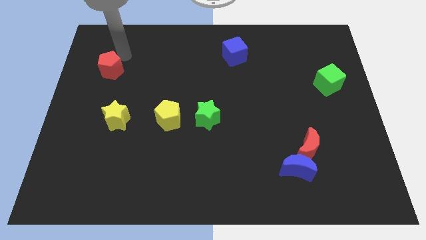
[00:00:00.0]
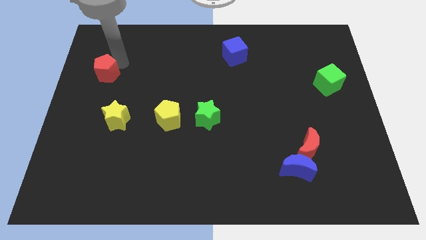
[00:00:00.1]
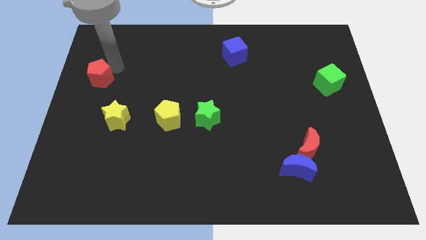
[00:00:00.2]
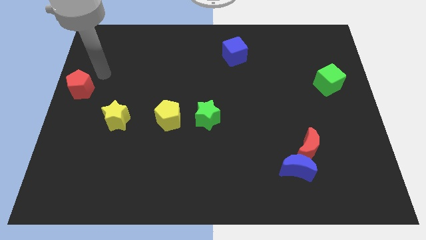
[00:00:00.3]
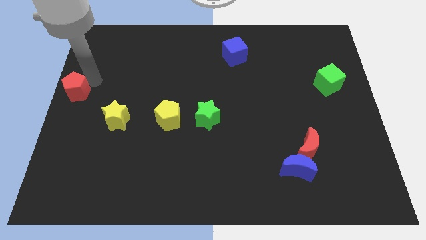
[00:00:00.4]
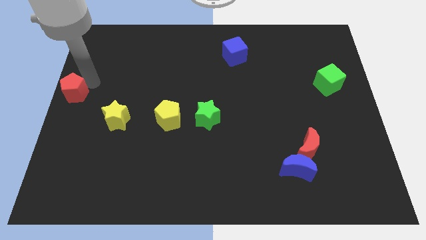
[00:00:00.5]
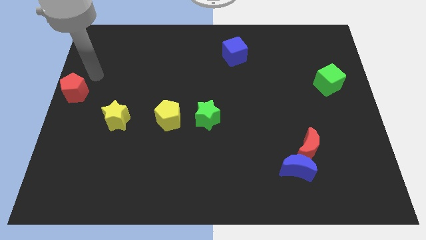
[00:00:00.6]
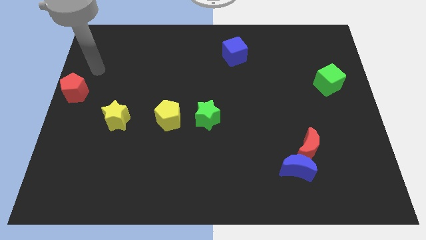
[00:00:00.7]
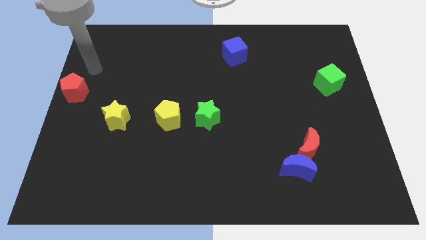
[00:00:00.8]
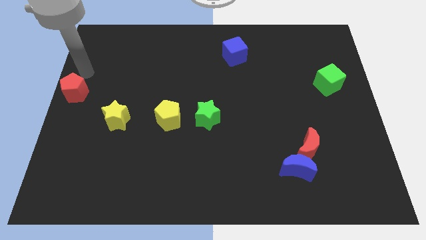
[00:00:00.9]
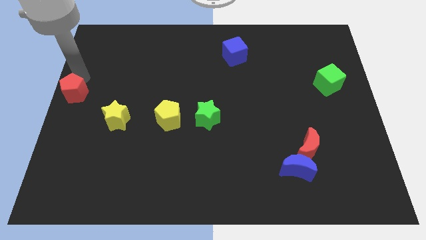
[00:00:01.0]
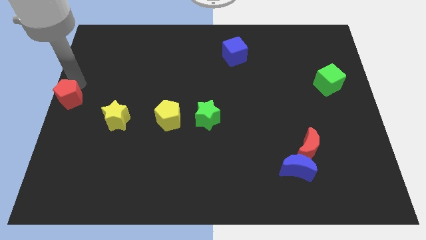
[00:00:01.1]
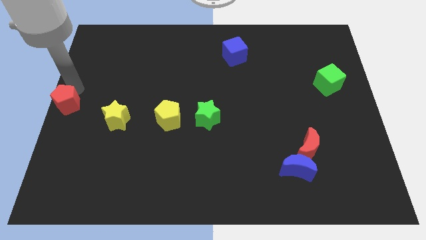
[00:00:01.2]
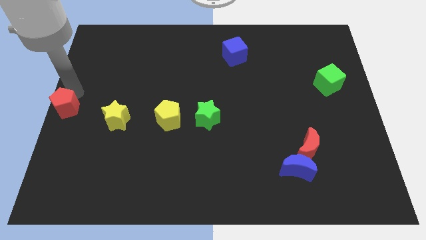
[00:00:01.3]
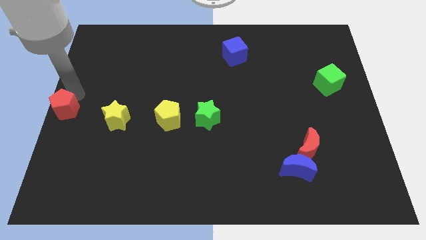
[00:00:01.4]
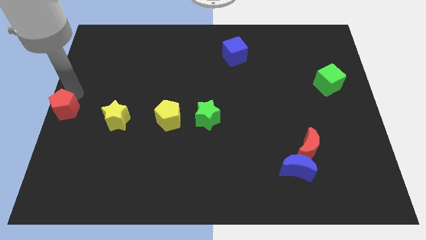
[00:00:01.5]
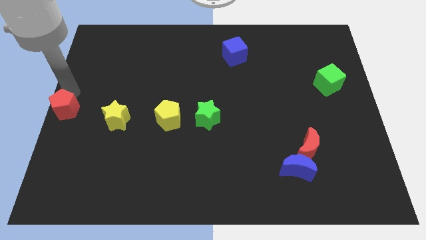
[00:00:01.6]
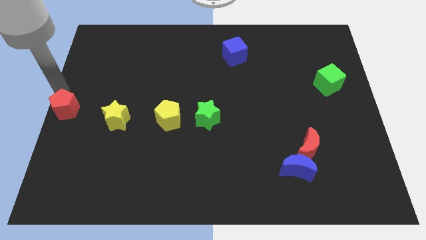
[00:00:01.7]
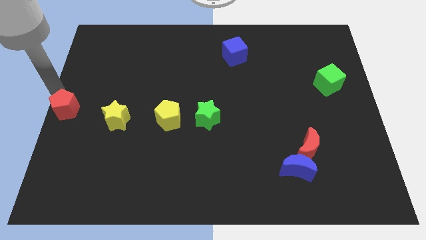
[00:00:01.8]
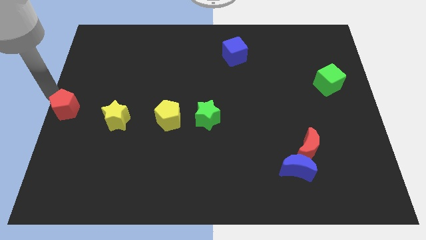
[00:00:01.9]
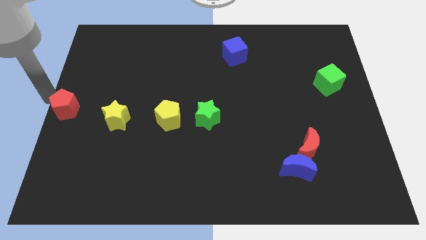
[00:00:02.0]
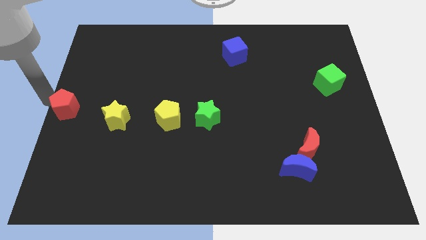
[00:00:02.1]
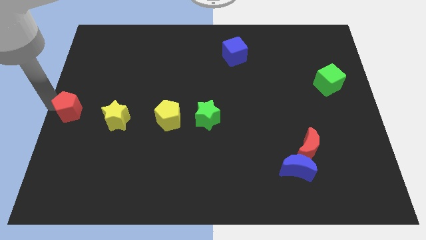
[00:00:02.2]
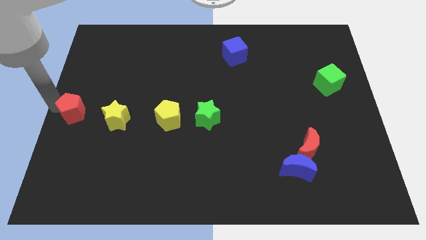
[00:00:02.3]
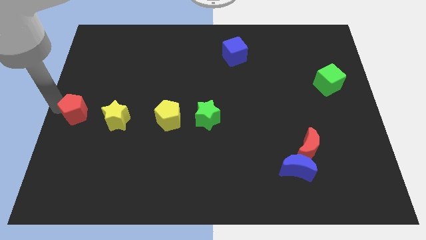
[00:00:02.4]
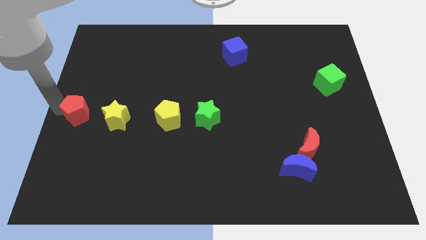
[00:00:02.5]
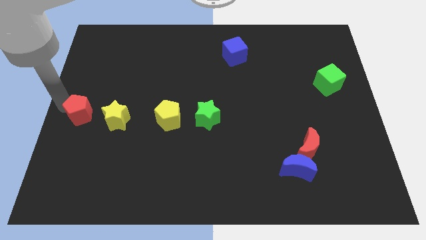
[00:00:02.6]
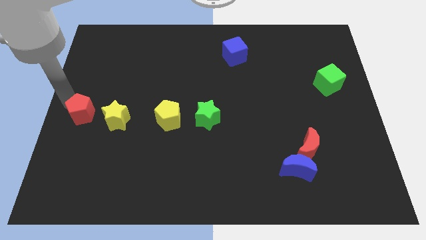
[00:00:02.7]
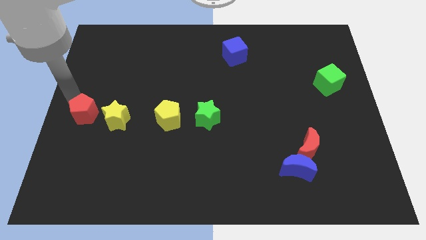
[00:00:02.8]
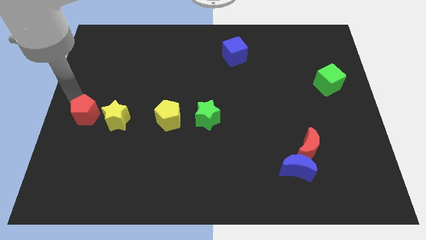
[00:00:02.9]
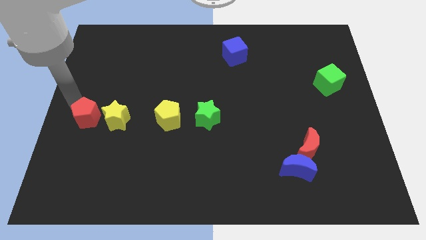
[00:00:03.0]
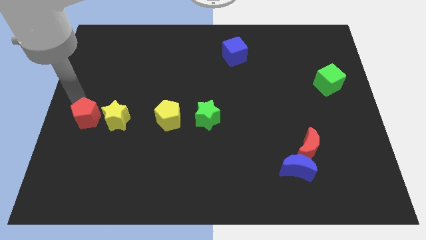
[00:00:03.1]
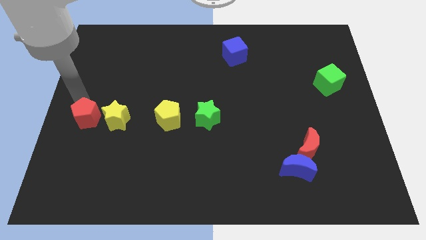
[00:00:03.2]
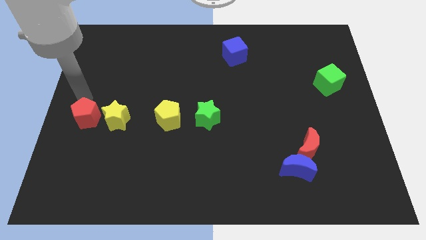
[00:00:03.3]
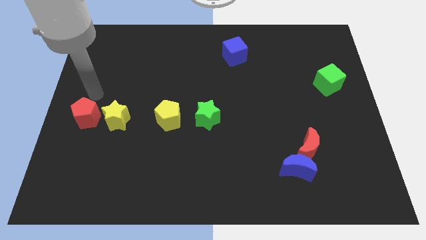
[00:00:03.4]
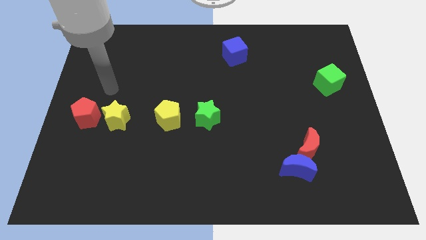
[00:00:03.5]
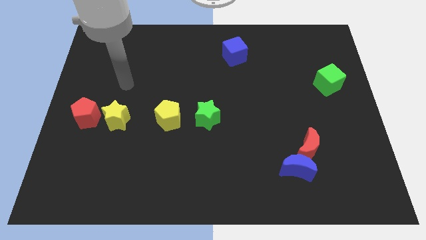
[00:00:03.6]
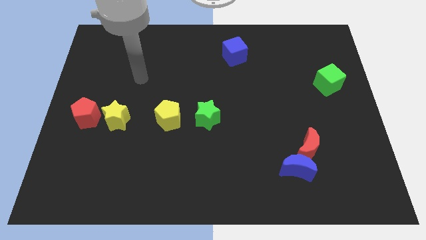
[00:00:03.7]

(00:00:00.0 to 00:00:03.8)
move red pentagon left to yellow star

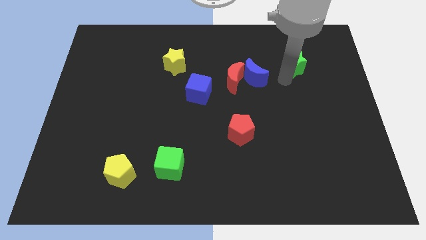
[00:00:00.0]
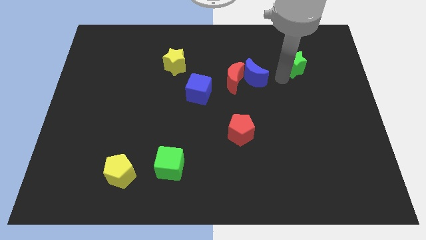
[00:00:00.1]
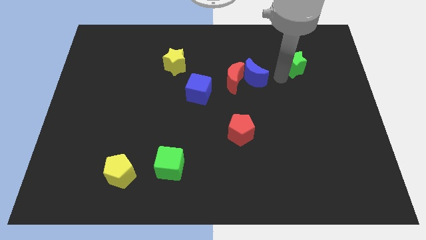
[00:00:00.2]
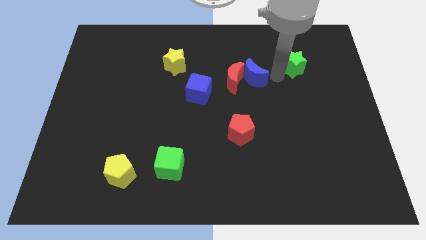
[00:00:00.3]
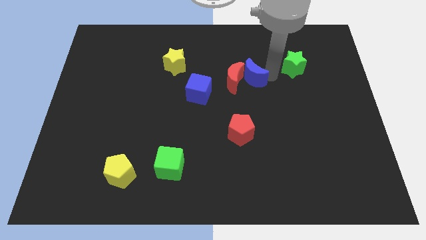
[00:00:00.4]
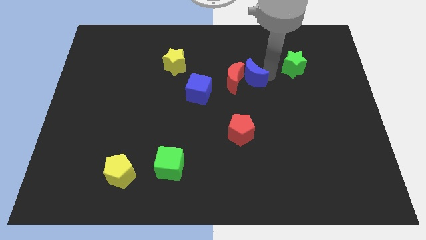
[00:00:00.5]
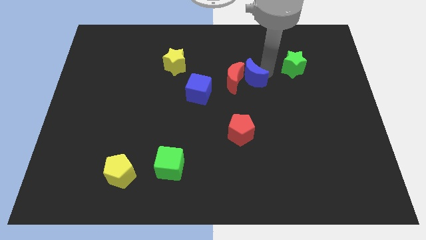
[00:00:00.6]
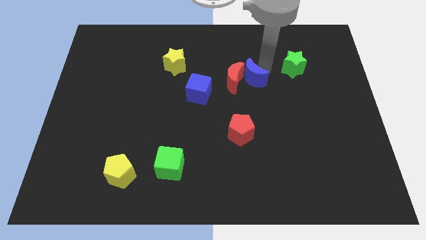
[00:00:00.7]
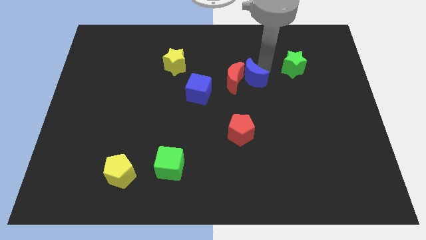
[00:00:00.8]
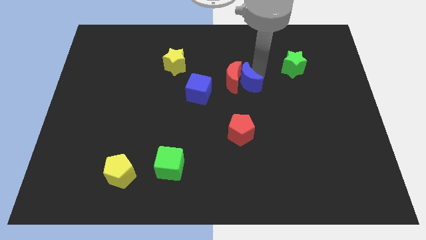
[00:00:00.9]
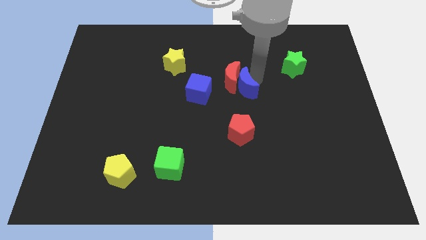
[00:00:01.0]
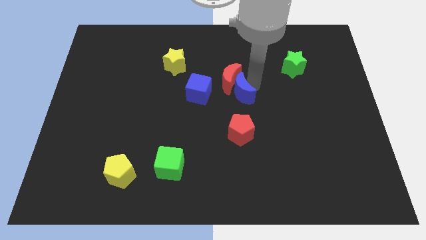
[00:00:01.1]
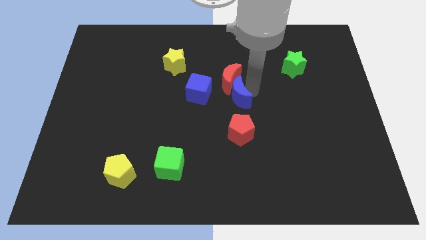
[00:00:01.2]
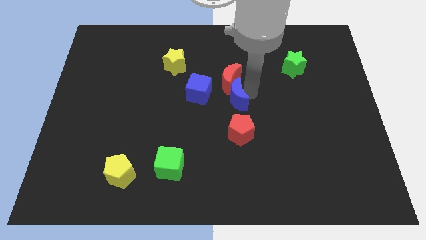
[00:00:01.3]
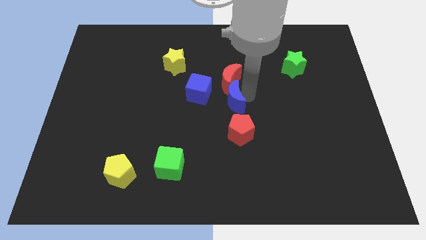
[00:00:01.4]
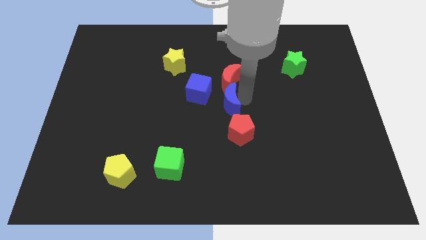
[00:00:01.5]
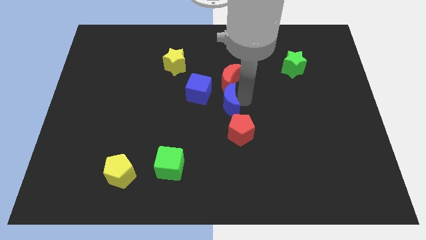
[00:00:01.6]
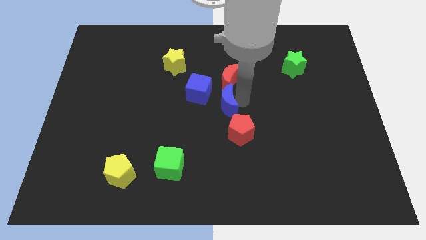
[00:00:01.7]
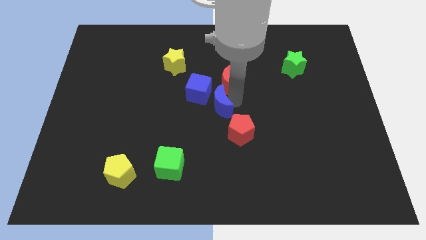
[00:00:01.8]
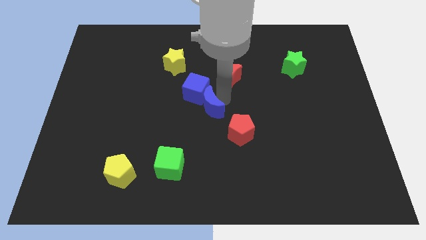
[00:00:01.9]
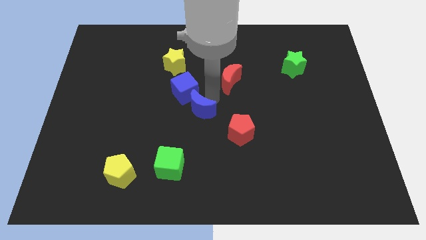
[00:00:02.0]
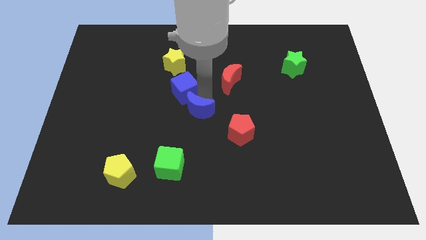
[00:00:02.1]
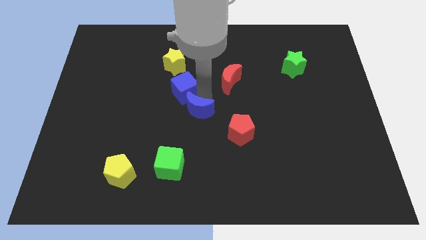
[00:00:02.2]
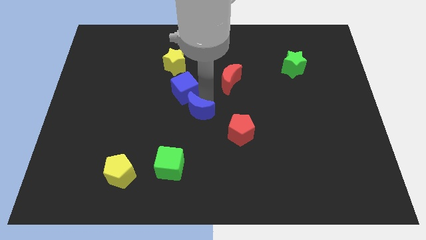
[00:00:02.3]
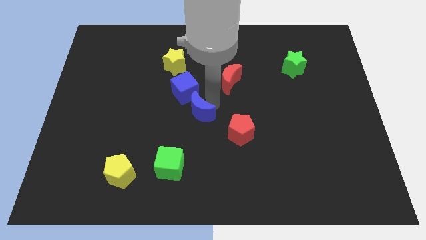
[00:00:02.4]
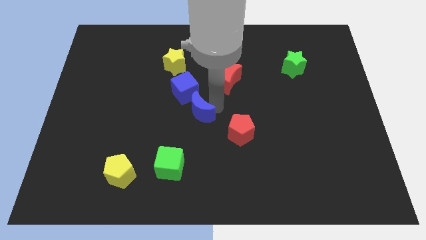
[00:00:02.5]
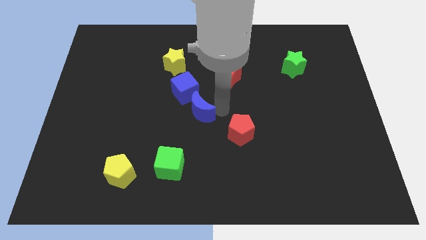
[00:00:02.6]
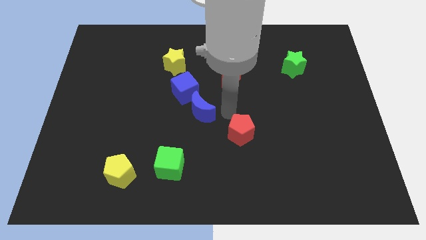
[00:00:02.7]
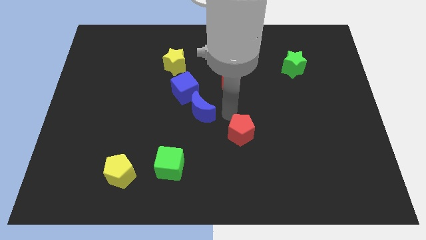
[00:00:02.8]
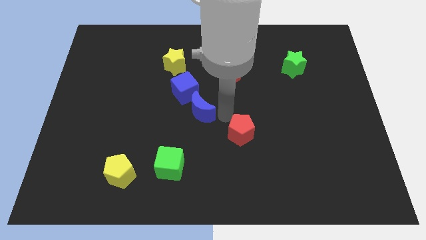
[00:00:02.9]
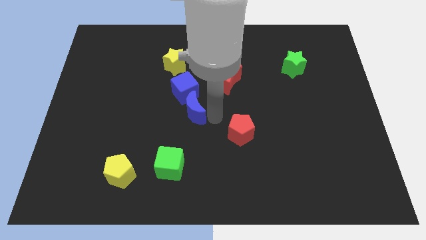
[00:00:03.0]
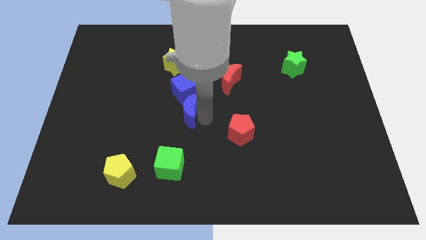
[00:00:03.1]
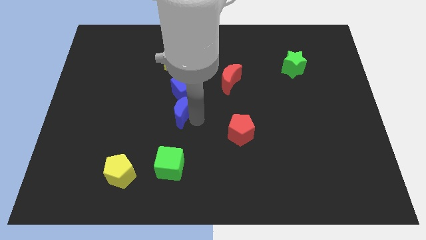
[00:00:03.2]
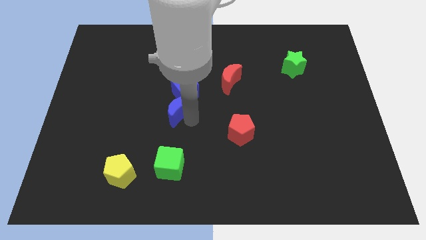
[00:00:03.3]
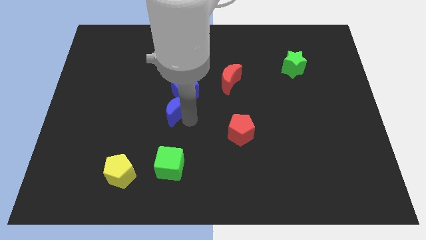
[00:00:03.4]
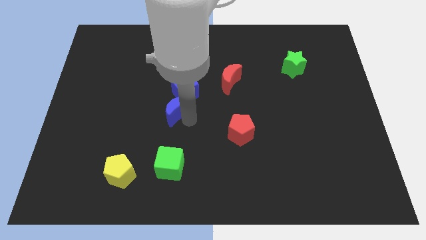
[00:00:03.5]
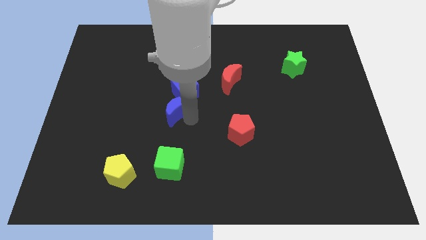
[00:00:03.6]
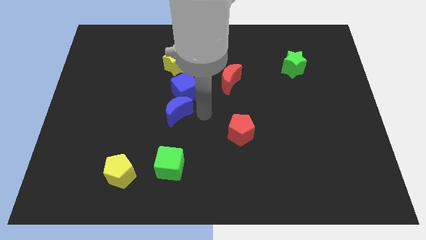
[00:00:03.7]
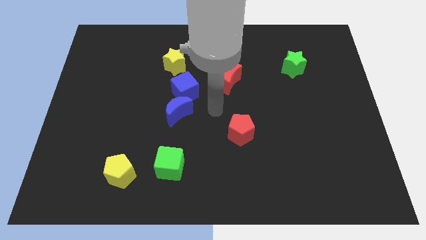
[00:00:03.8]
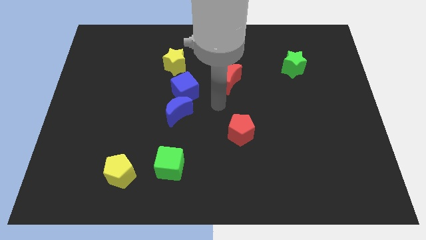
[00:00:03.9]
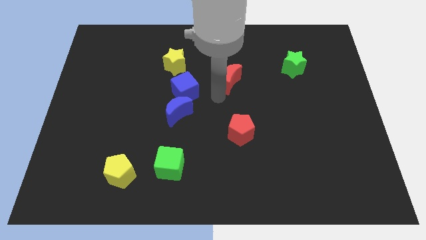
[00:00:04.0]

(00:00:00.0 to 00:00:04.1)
separate the blue crescent from the red moon

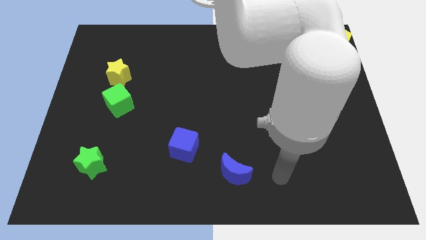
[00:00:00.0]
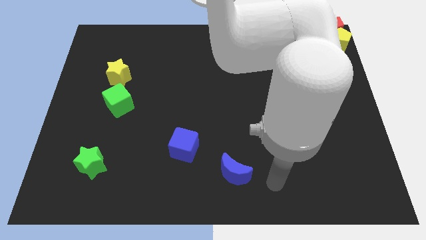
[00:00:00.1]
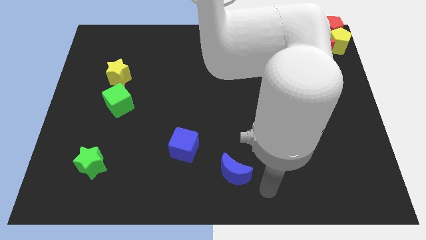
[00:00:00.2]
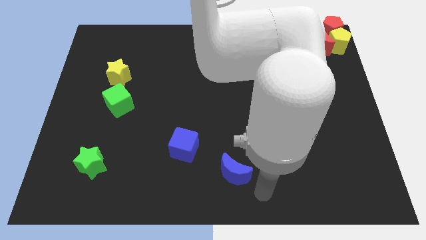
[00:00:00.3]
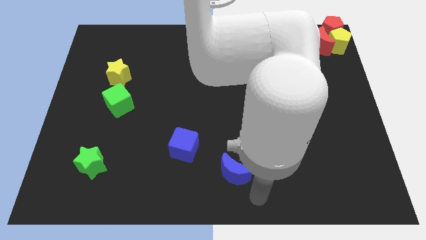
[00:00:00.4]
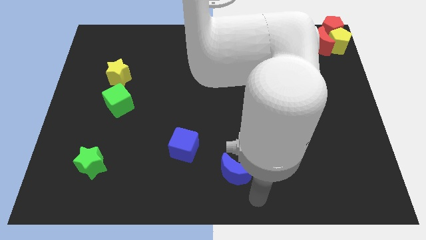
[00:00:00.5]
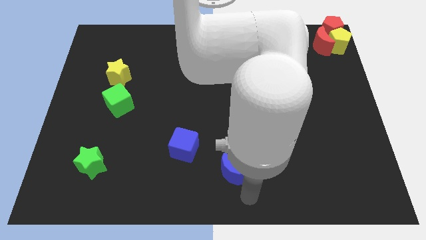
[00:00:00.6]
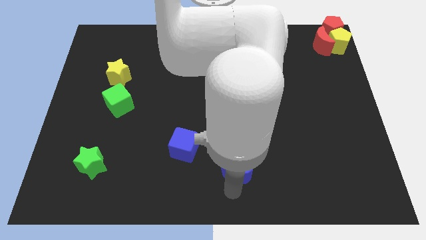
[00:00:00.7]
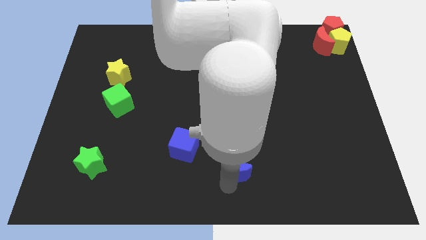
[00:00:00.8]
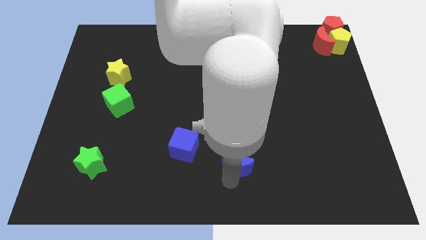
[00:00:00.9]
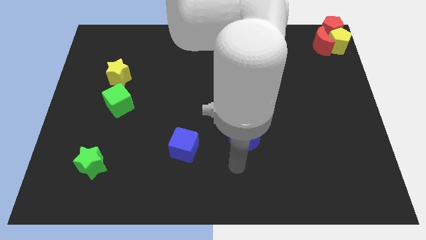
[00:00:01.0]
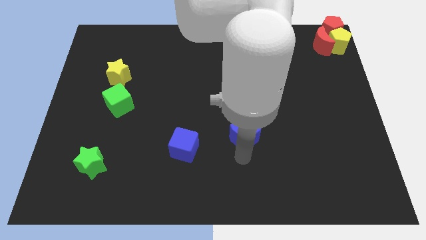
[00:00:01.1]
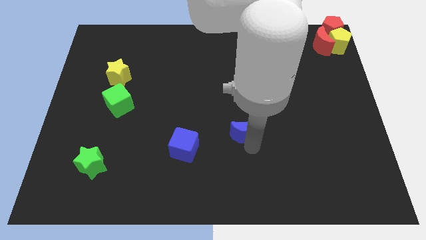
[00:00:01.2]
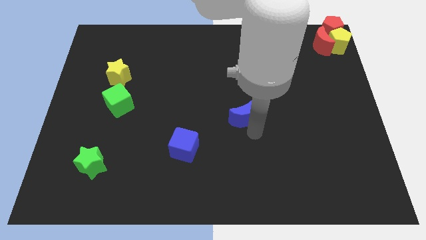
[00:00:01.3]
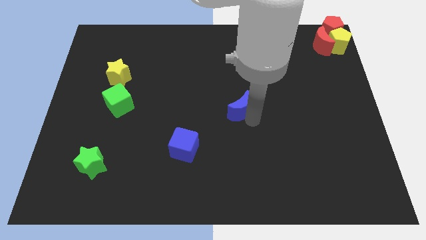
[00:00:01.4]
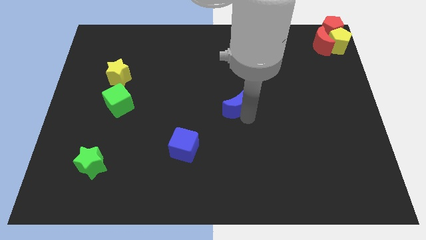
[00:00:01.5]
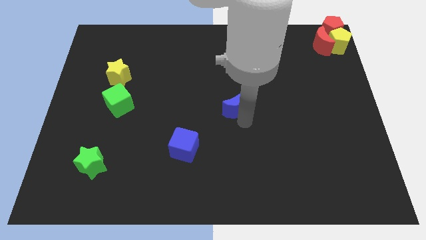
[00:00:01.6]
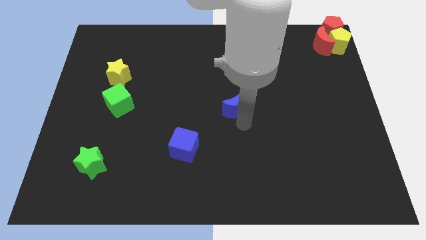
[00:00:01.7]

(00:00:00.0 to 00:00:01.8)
place the blue moon at the top right of the blue cube
